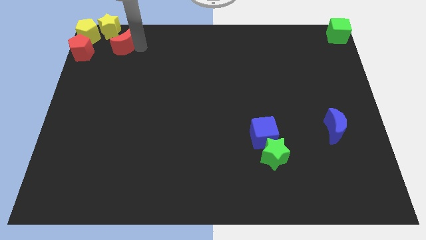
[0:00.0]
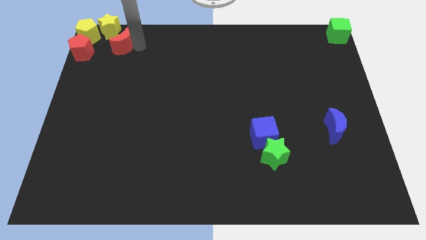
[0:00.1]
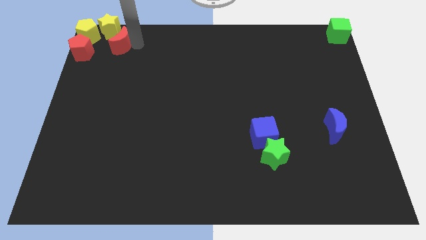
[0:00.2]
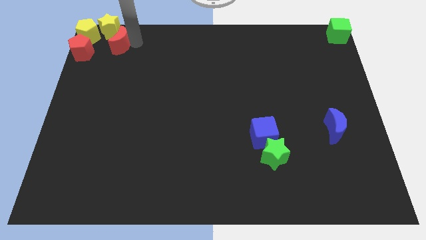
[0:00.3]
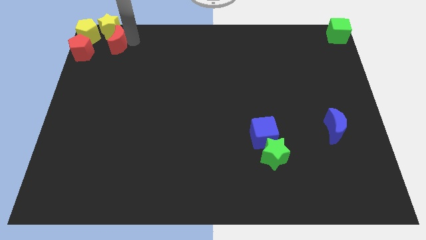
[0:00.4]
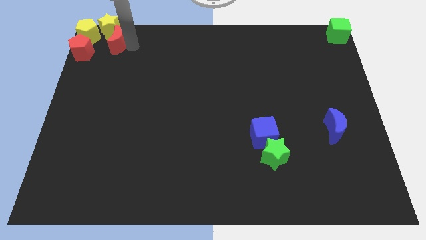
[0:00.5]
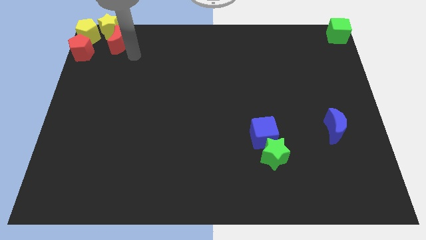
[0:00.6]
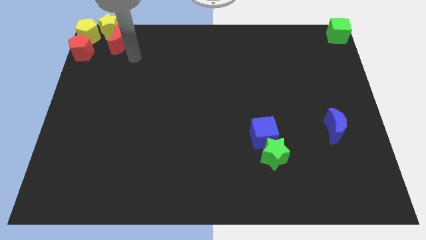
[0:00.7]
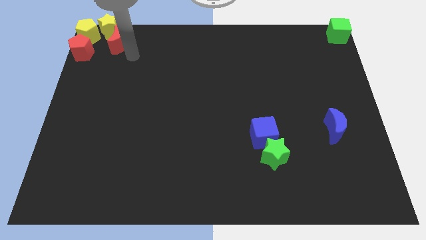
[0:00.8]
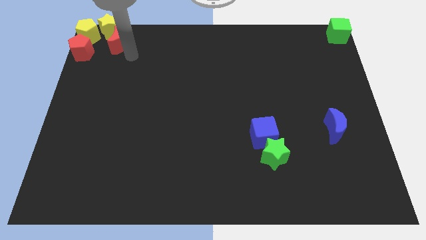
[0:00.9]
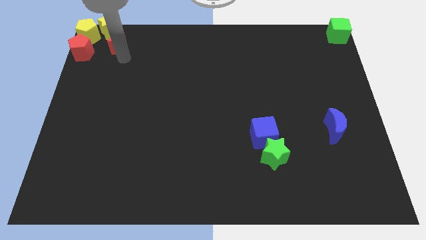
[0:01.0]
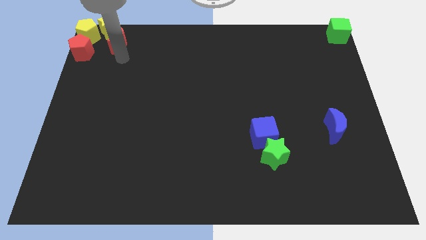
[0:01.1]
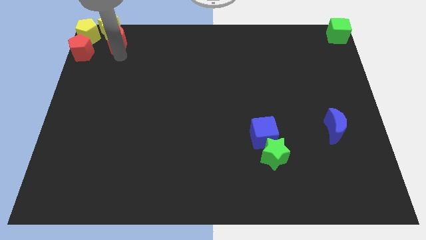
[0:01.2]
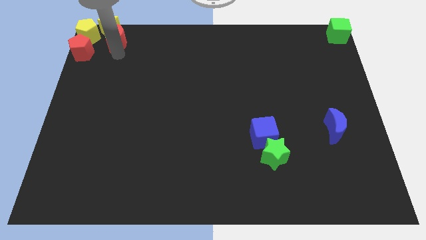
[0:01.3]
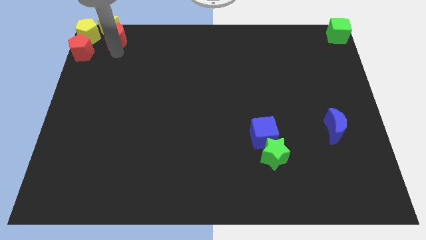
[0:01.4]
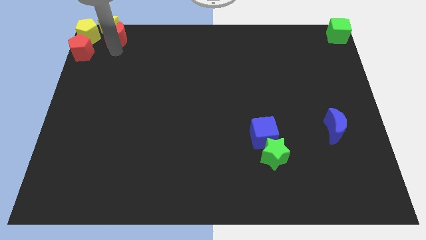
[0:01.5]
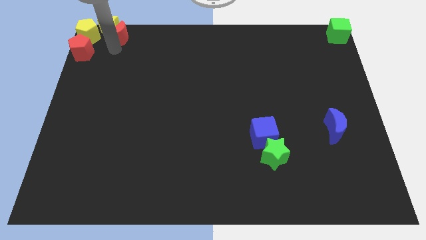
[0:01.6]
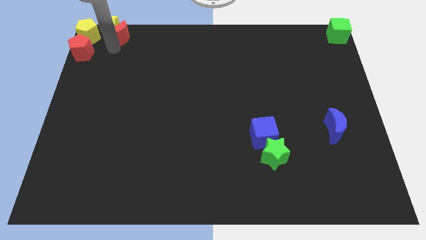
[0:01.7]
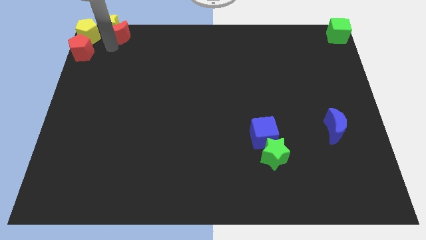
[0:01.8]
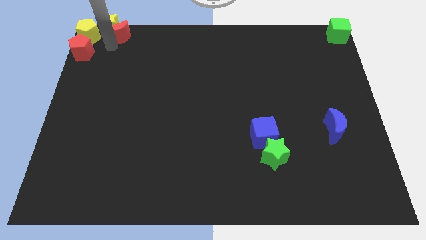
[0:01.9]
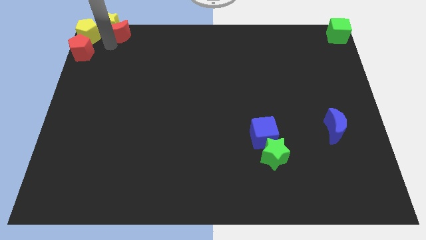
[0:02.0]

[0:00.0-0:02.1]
add the red moon to the group of blocks at the top left corner of the board

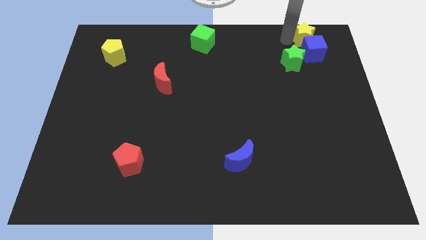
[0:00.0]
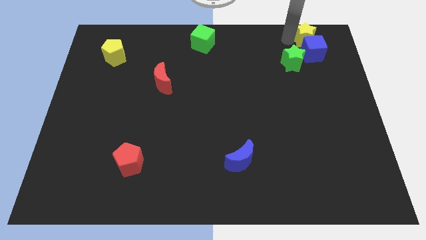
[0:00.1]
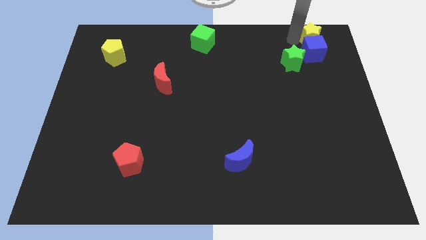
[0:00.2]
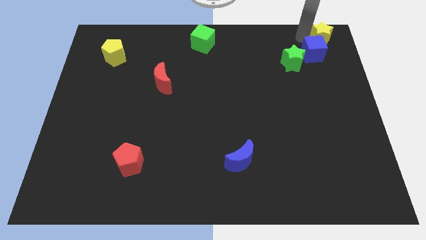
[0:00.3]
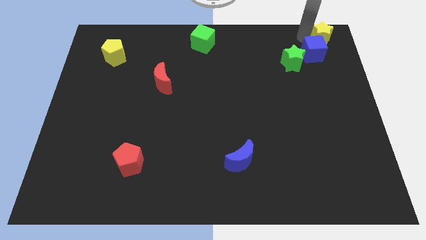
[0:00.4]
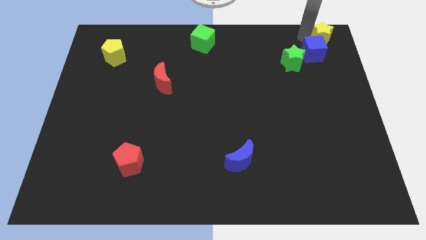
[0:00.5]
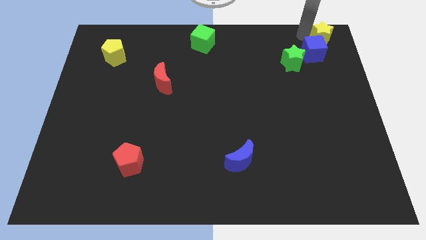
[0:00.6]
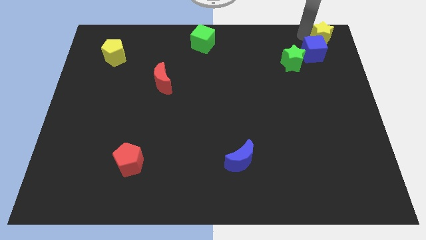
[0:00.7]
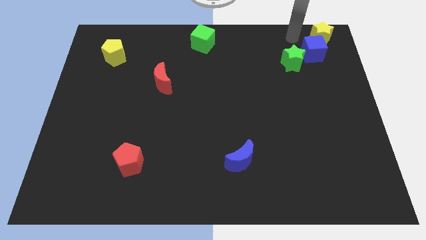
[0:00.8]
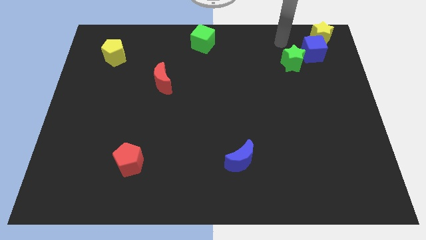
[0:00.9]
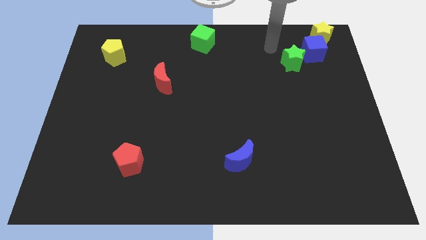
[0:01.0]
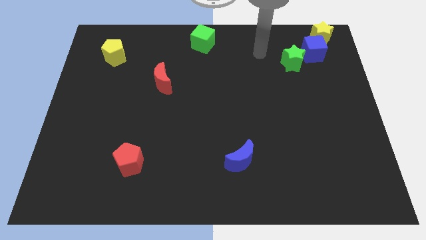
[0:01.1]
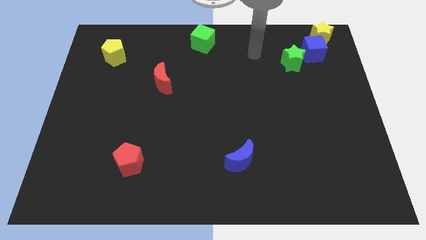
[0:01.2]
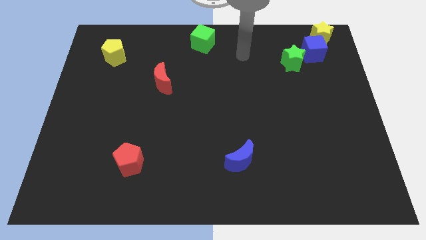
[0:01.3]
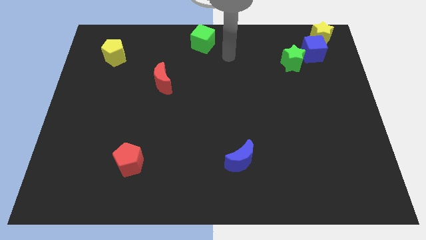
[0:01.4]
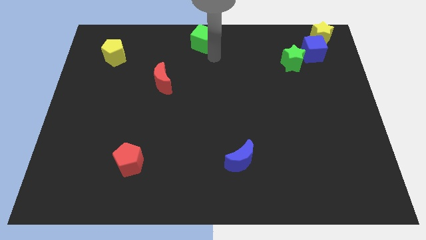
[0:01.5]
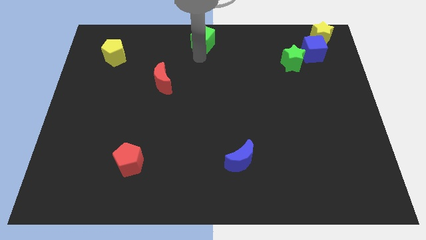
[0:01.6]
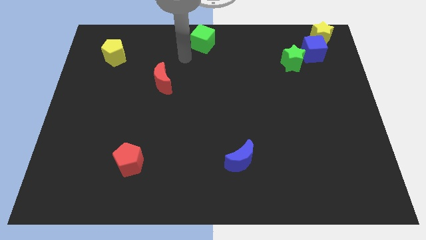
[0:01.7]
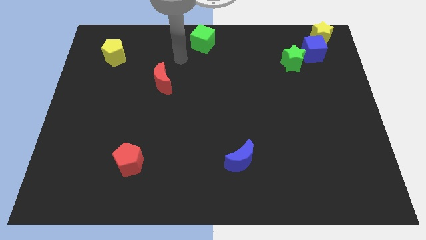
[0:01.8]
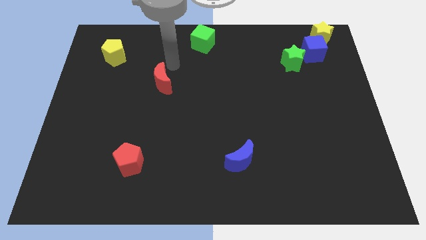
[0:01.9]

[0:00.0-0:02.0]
push yellow star slightly towards the top corner

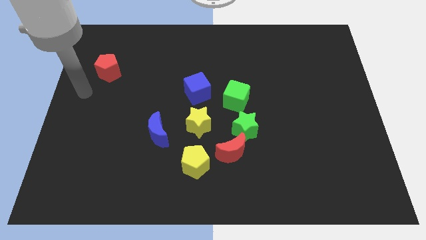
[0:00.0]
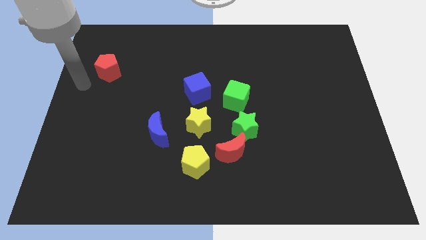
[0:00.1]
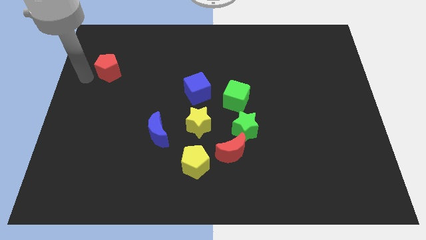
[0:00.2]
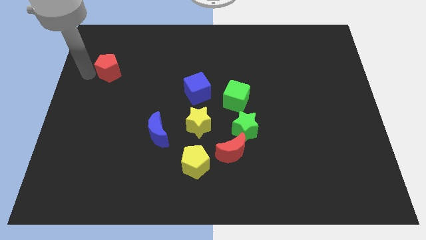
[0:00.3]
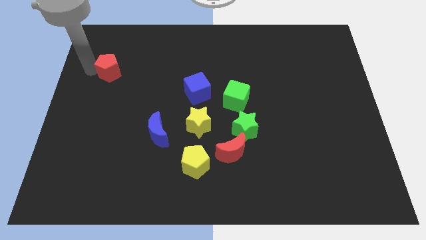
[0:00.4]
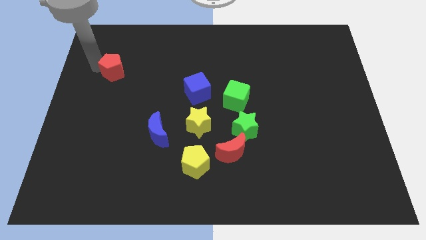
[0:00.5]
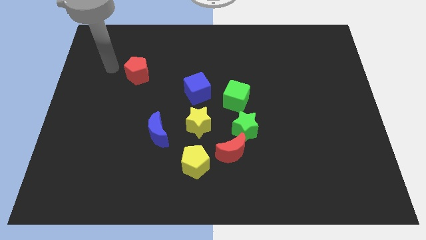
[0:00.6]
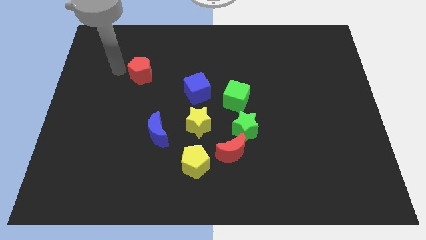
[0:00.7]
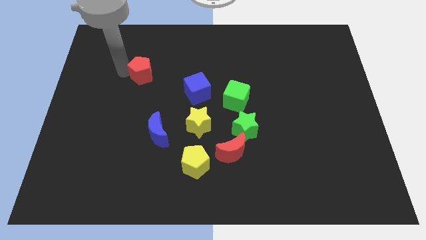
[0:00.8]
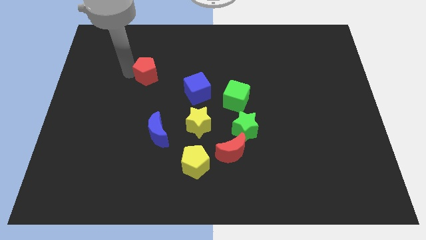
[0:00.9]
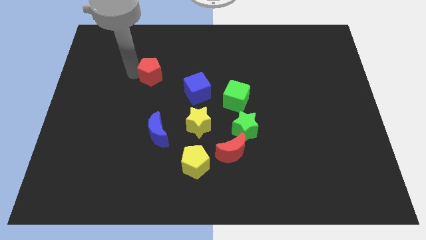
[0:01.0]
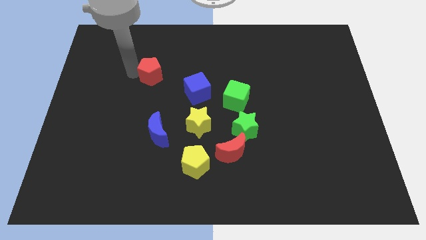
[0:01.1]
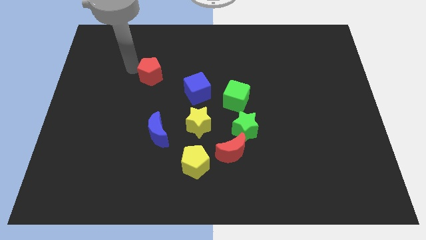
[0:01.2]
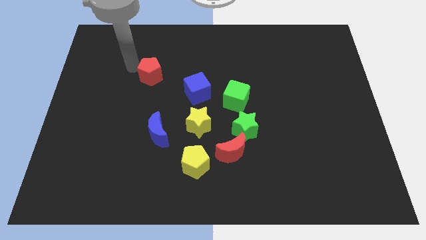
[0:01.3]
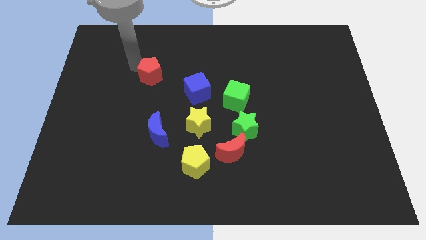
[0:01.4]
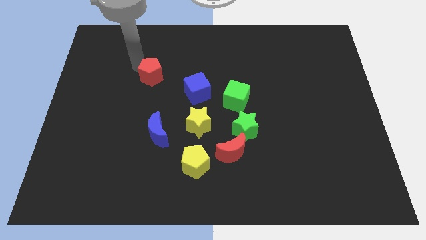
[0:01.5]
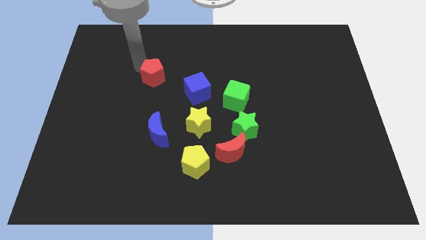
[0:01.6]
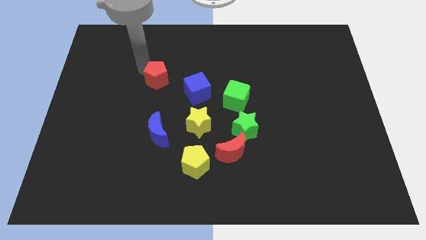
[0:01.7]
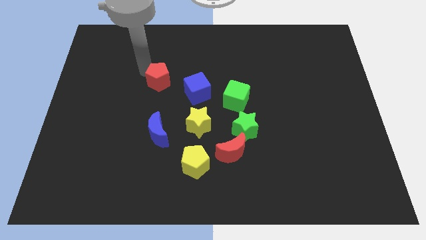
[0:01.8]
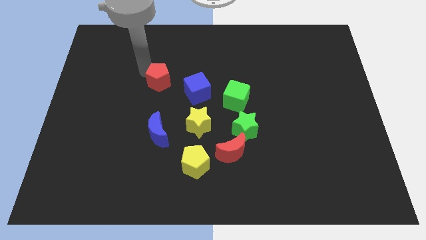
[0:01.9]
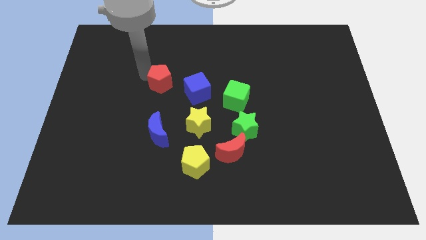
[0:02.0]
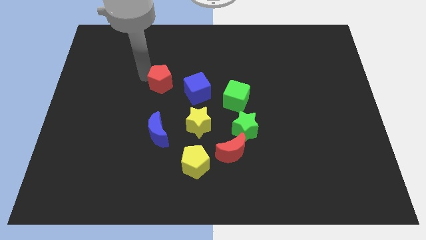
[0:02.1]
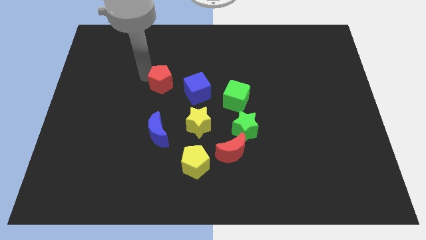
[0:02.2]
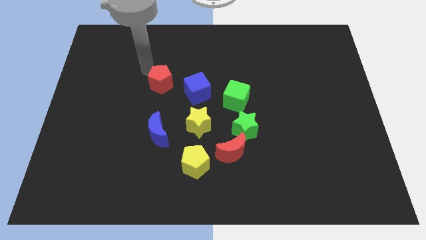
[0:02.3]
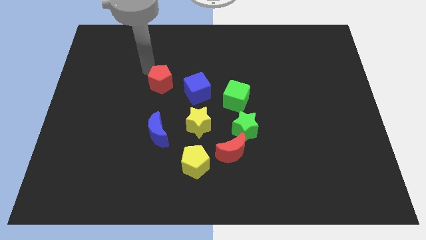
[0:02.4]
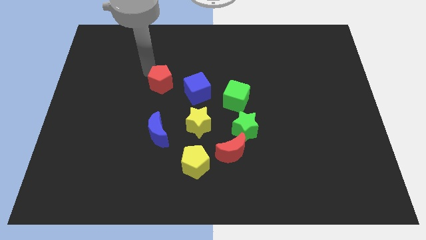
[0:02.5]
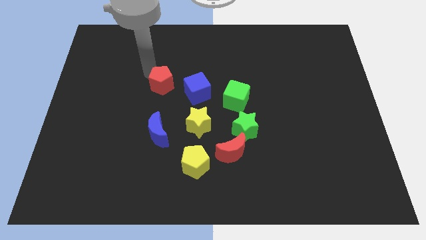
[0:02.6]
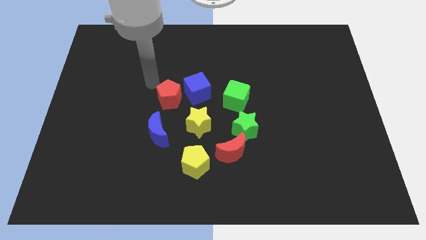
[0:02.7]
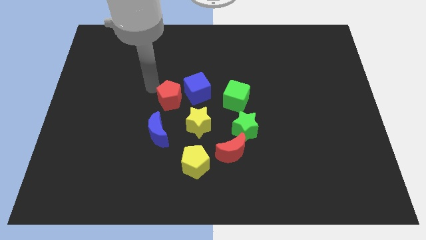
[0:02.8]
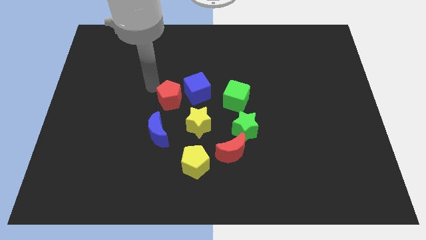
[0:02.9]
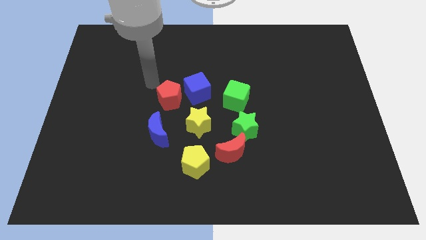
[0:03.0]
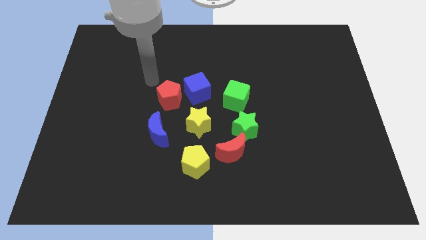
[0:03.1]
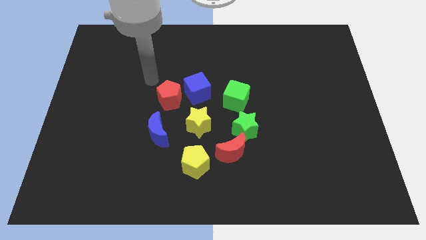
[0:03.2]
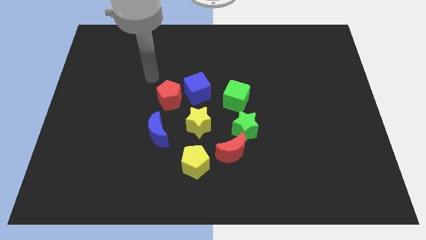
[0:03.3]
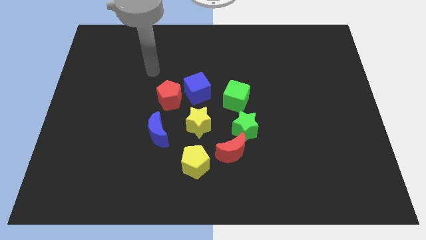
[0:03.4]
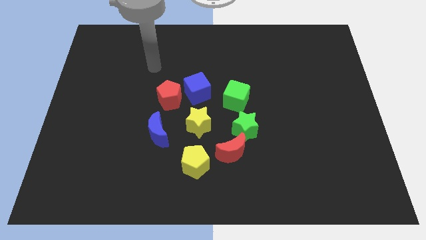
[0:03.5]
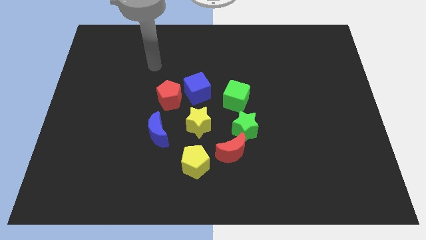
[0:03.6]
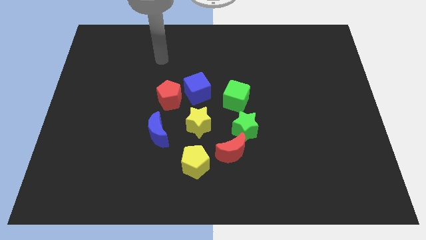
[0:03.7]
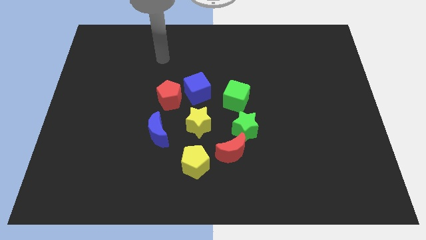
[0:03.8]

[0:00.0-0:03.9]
push the red pentagon left to the blue cube

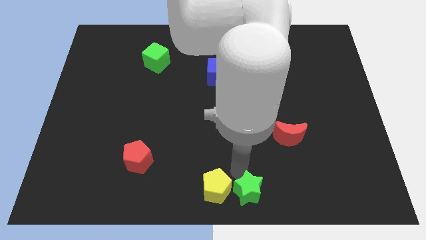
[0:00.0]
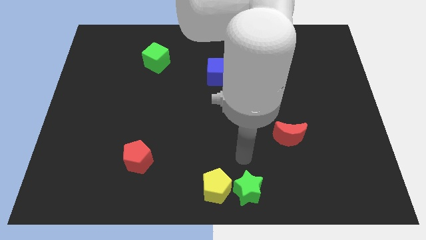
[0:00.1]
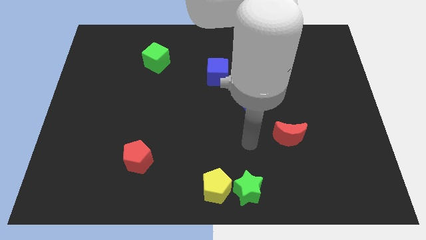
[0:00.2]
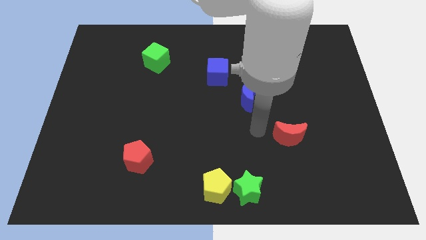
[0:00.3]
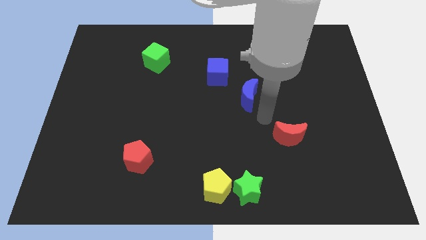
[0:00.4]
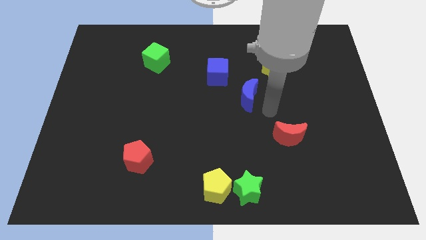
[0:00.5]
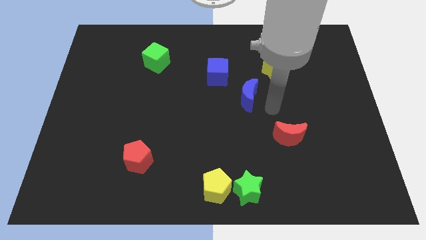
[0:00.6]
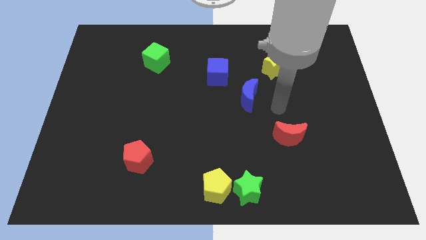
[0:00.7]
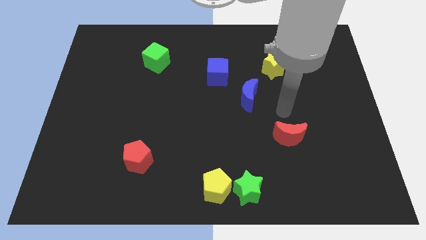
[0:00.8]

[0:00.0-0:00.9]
move your arm away from the green star

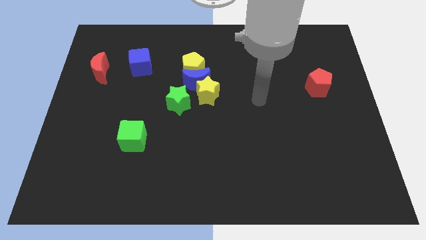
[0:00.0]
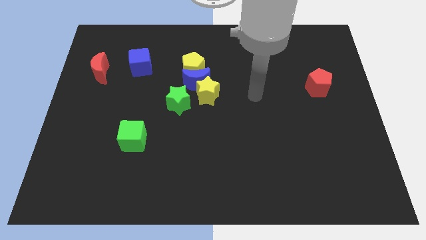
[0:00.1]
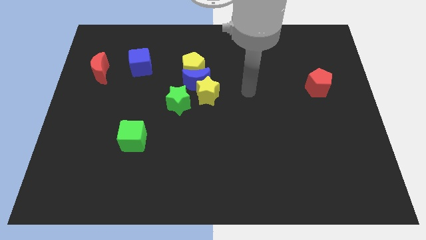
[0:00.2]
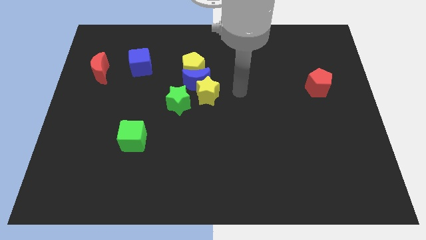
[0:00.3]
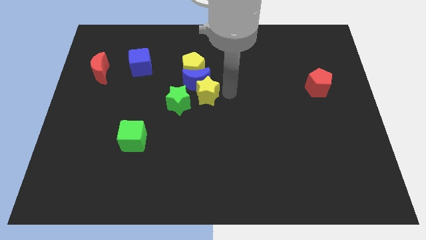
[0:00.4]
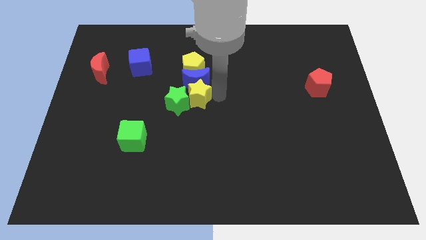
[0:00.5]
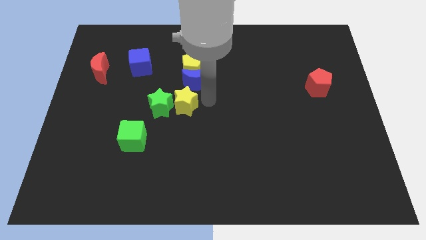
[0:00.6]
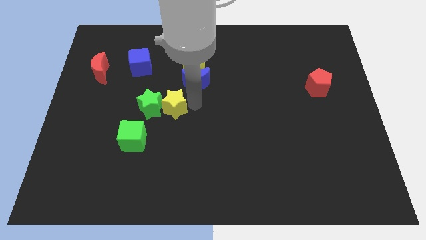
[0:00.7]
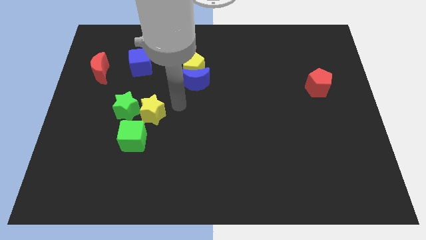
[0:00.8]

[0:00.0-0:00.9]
push the yellow star into the green star
